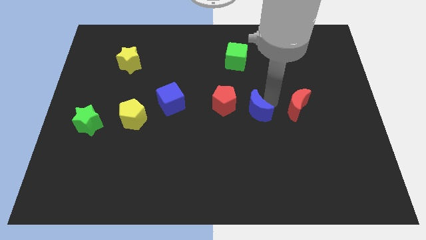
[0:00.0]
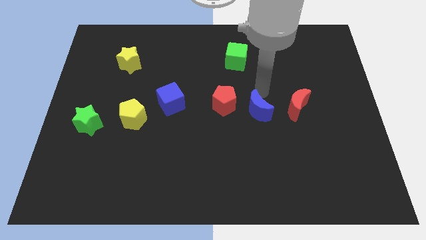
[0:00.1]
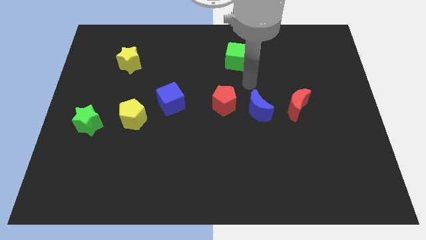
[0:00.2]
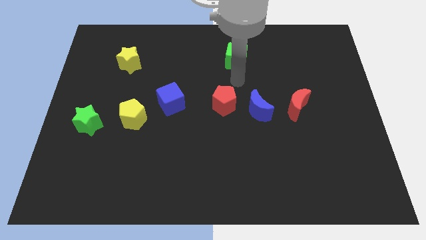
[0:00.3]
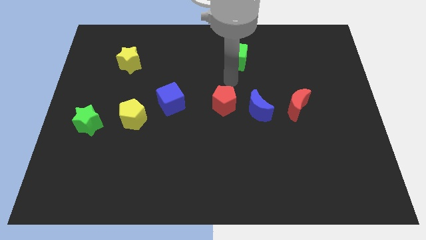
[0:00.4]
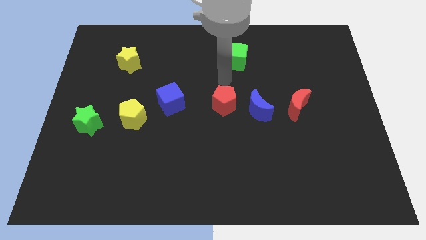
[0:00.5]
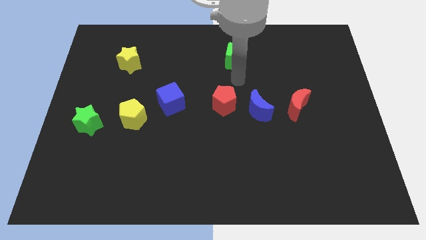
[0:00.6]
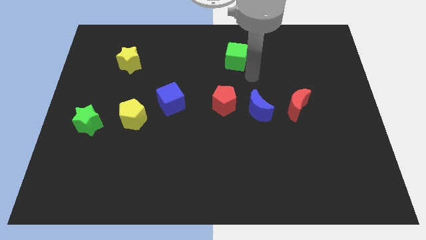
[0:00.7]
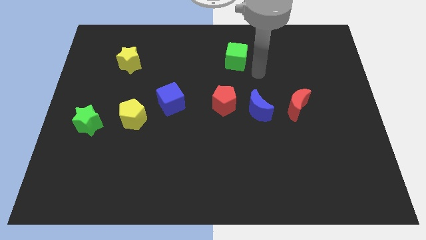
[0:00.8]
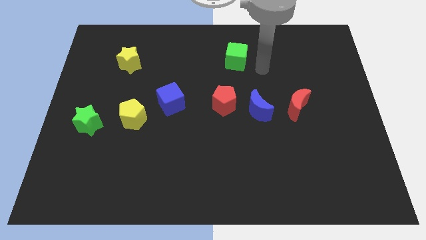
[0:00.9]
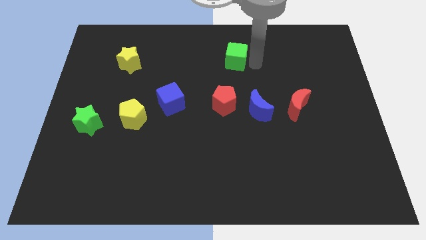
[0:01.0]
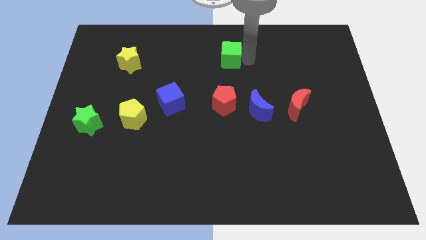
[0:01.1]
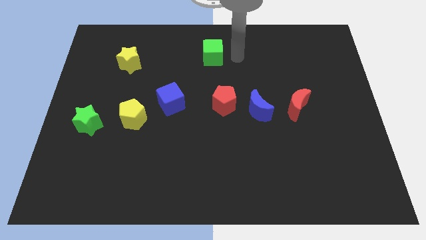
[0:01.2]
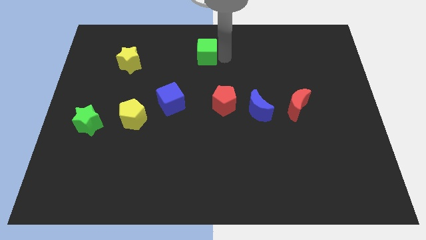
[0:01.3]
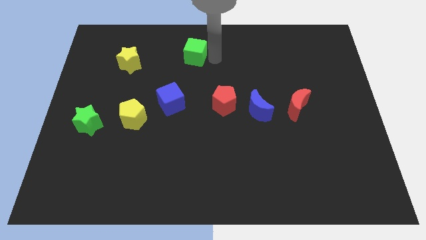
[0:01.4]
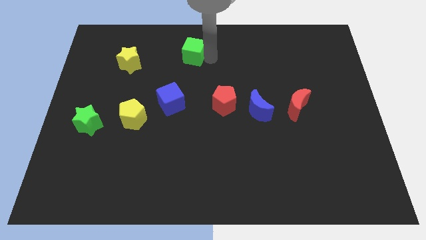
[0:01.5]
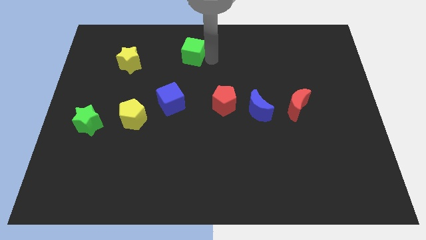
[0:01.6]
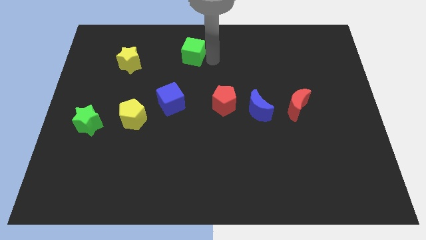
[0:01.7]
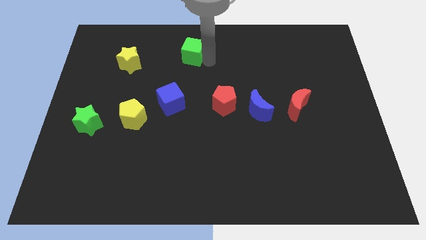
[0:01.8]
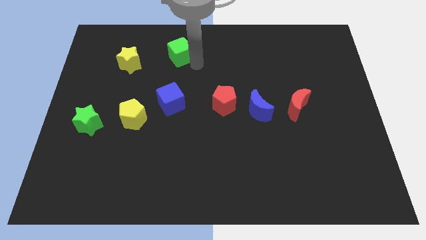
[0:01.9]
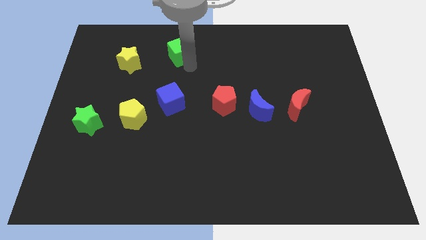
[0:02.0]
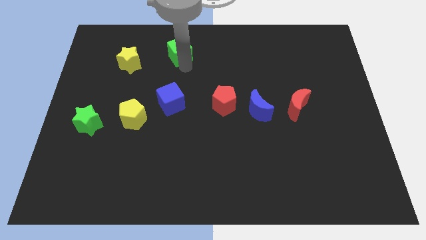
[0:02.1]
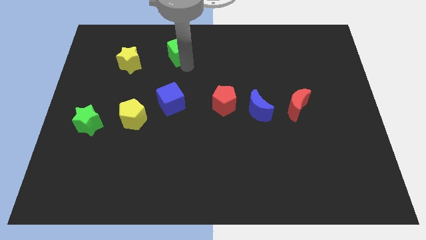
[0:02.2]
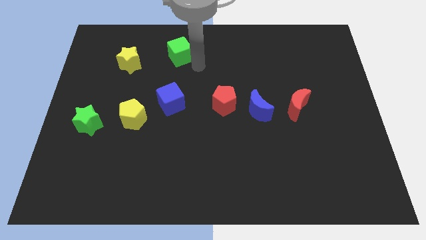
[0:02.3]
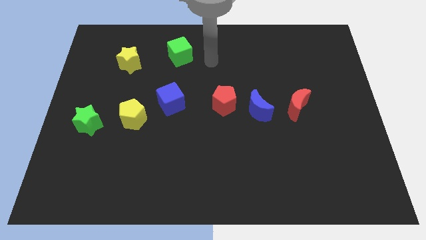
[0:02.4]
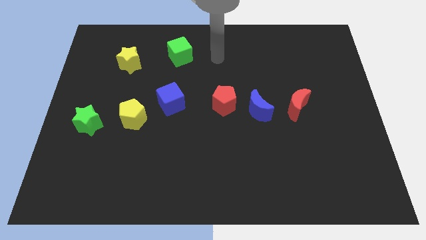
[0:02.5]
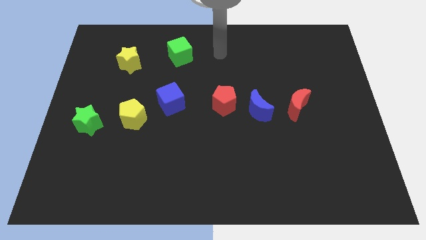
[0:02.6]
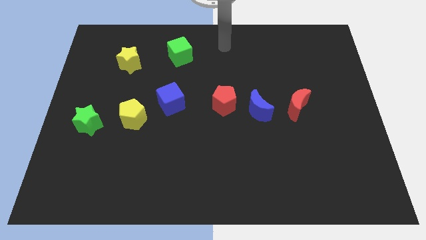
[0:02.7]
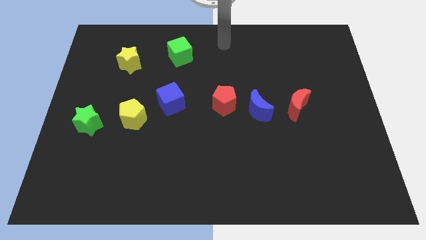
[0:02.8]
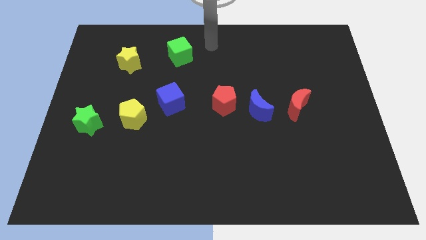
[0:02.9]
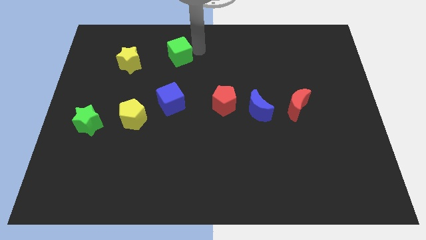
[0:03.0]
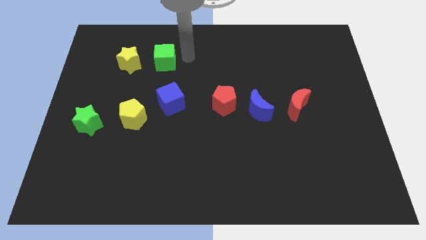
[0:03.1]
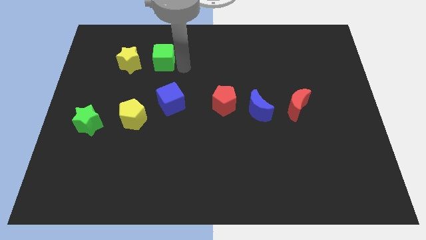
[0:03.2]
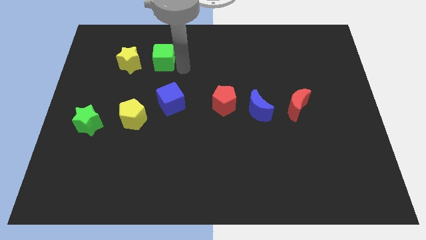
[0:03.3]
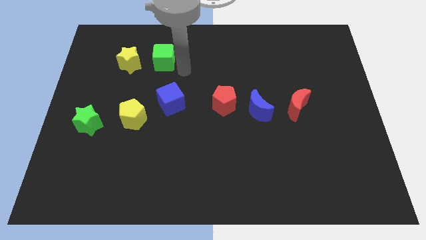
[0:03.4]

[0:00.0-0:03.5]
push green cube above blue cube

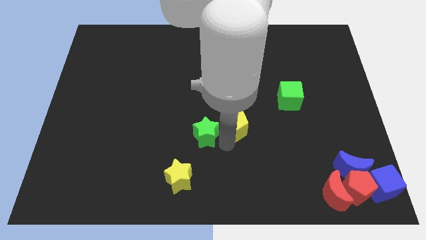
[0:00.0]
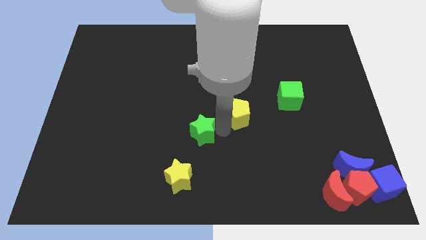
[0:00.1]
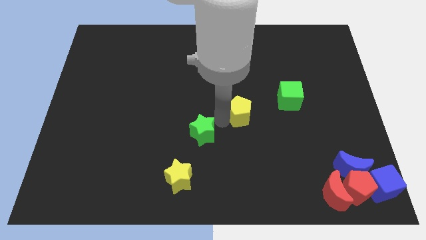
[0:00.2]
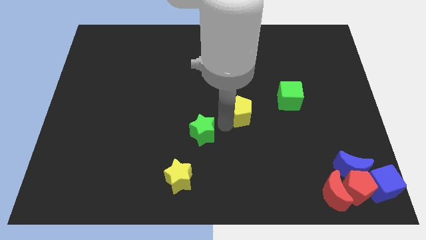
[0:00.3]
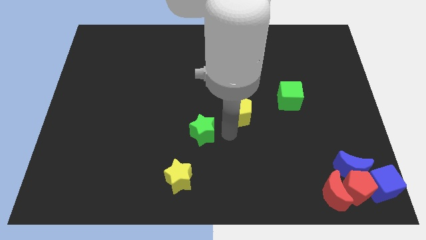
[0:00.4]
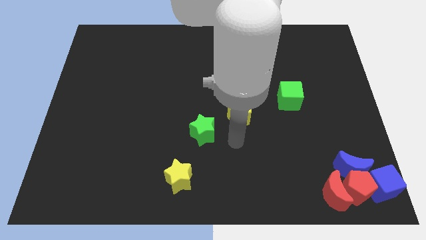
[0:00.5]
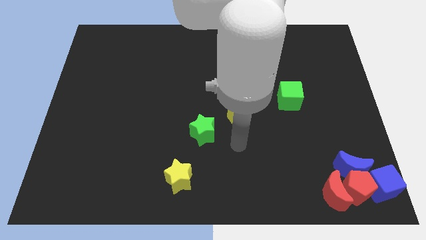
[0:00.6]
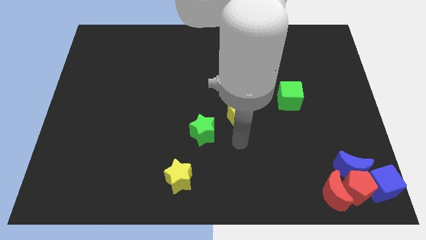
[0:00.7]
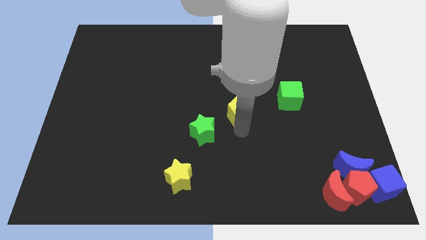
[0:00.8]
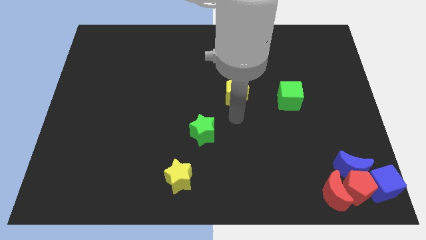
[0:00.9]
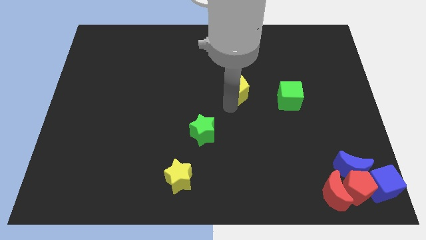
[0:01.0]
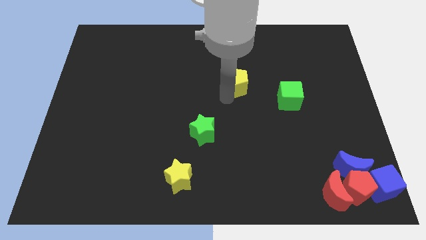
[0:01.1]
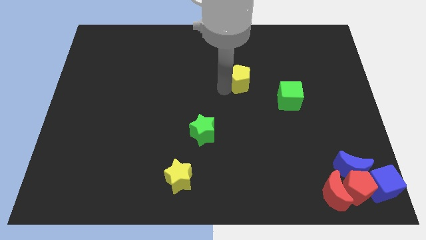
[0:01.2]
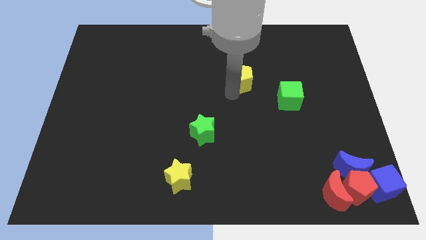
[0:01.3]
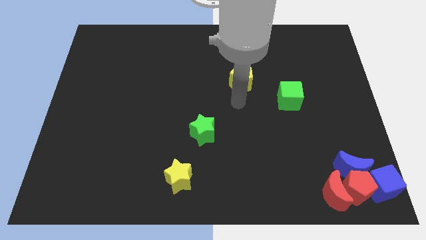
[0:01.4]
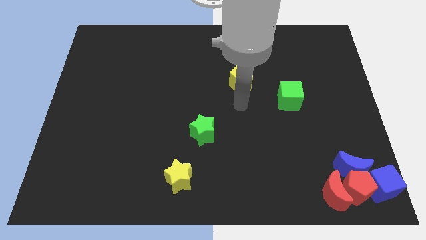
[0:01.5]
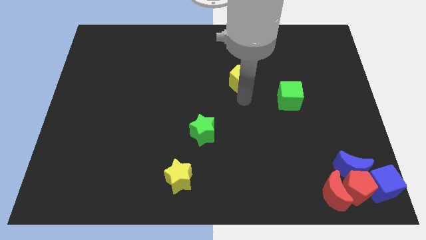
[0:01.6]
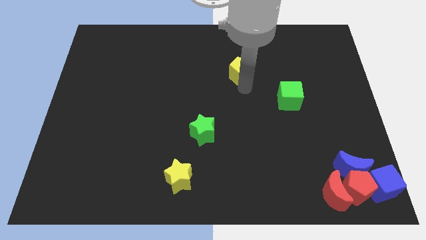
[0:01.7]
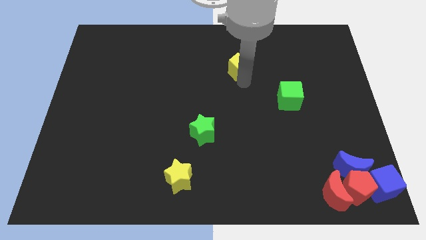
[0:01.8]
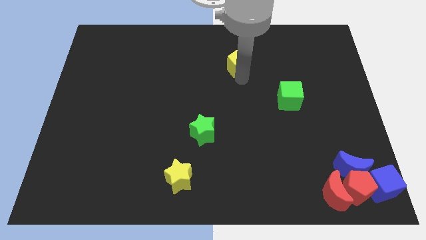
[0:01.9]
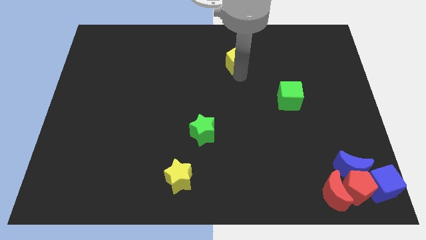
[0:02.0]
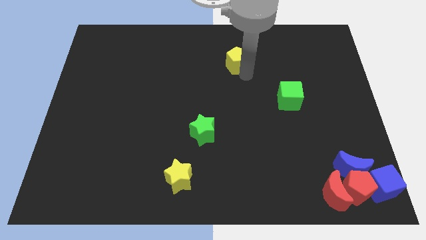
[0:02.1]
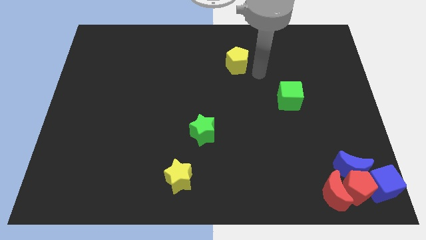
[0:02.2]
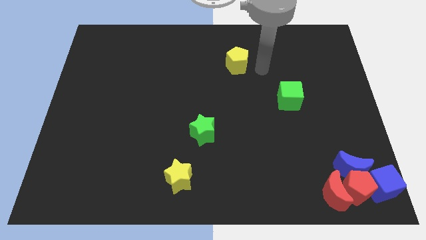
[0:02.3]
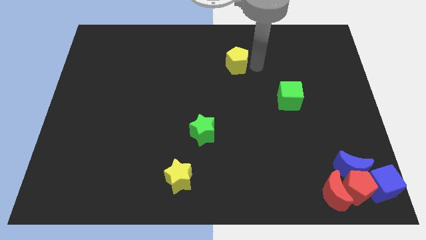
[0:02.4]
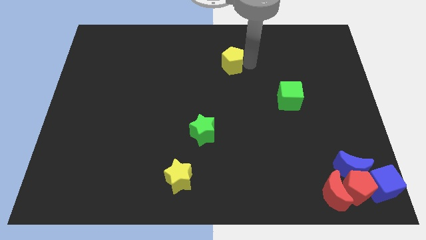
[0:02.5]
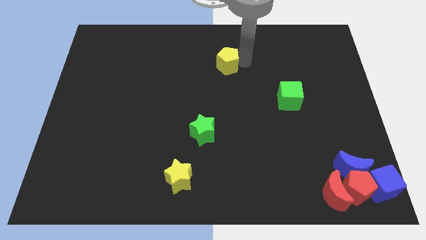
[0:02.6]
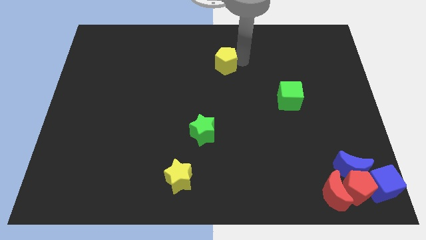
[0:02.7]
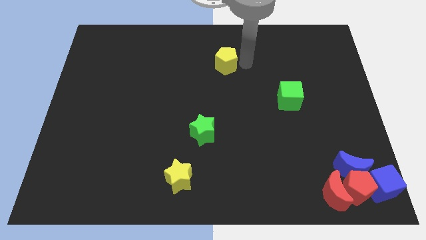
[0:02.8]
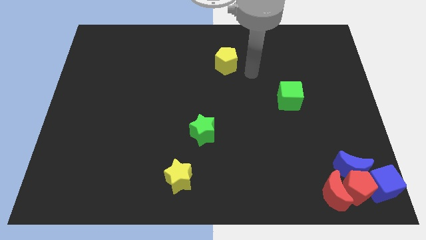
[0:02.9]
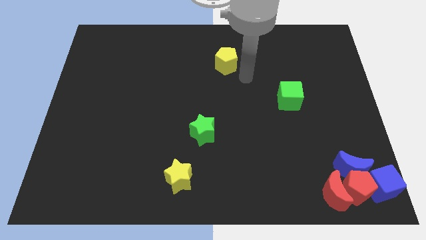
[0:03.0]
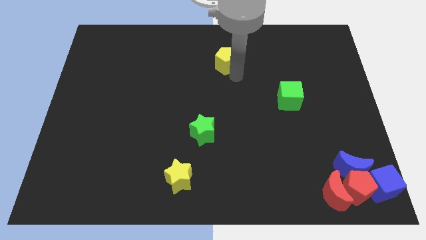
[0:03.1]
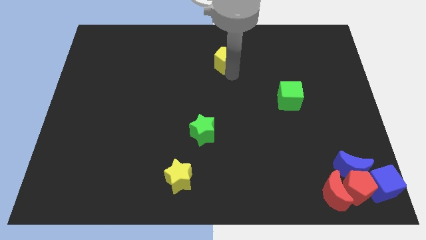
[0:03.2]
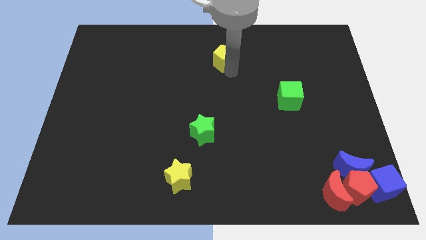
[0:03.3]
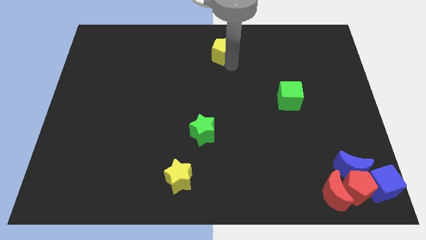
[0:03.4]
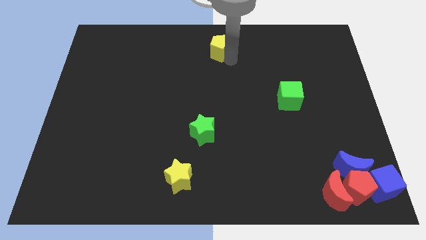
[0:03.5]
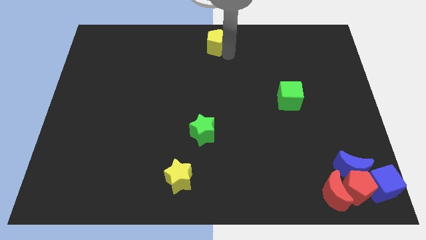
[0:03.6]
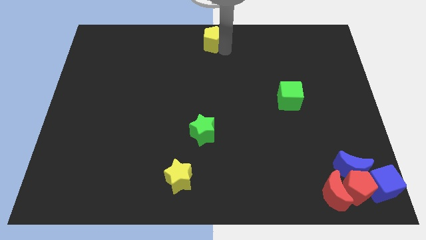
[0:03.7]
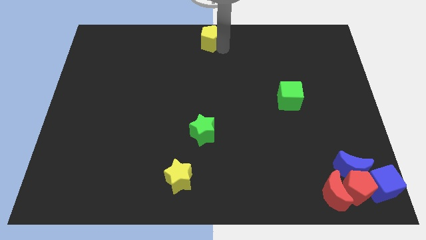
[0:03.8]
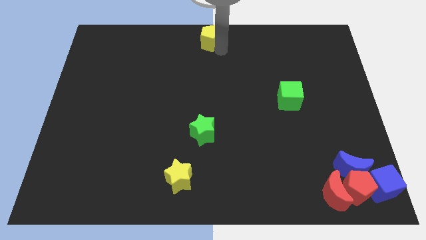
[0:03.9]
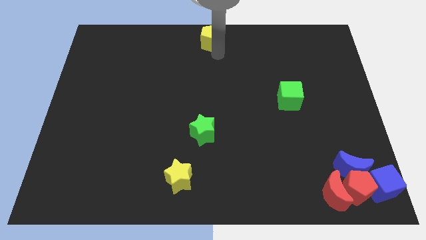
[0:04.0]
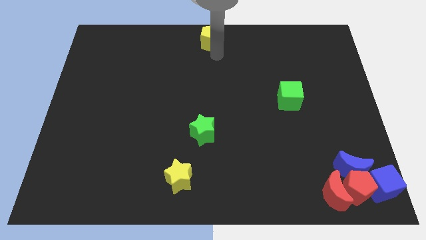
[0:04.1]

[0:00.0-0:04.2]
push yellow pentagon towards top middle of the board

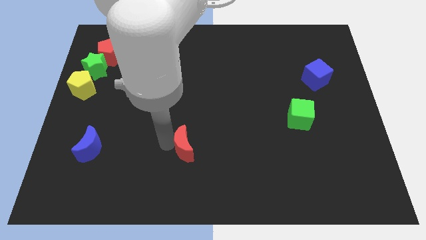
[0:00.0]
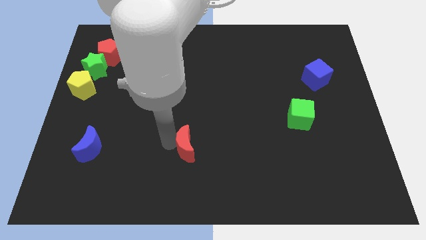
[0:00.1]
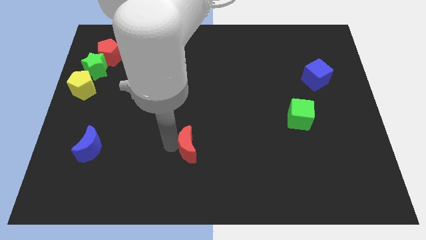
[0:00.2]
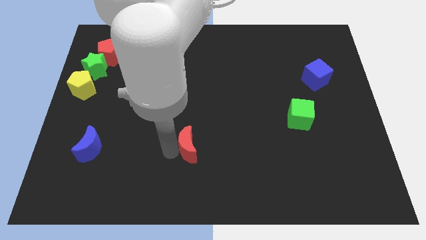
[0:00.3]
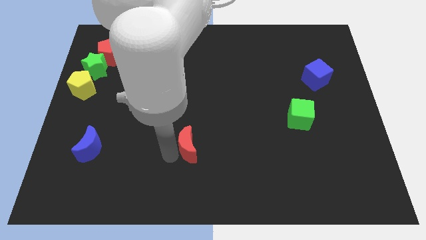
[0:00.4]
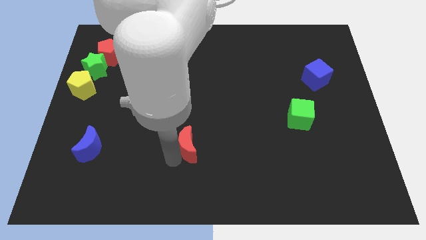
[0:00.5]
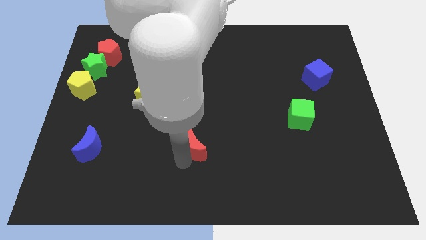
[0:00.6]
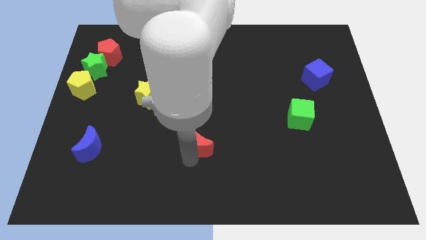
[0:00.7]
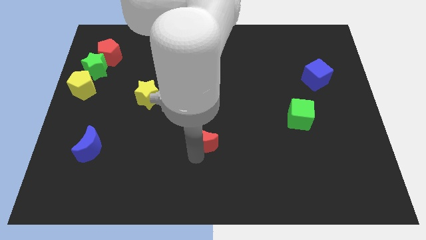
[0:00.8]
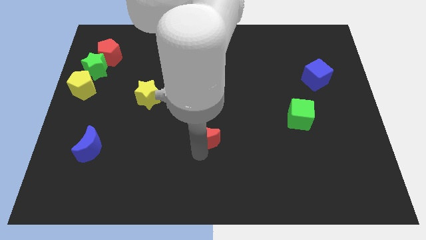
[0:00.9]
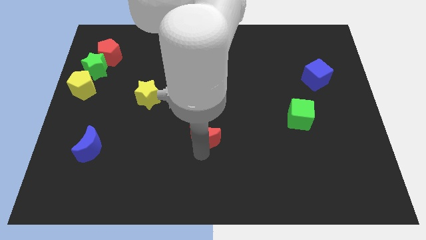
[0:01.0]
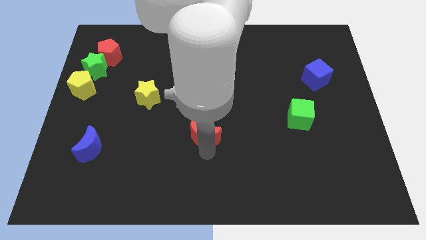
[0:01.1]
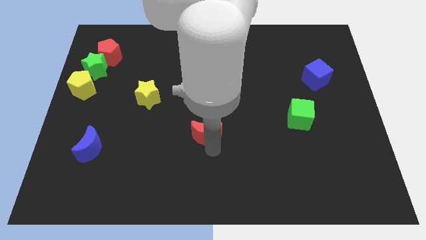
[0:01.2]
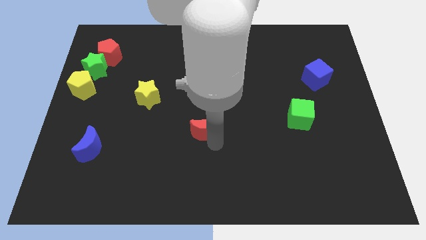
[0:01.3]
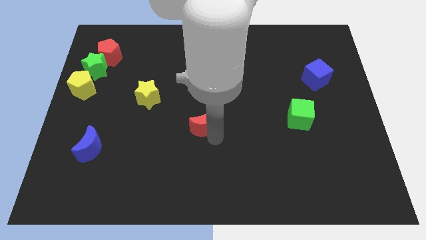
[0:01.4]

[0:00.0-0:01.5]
move the red moon towards the center of the table
